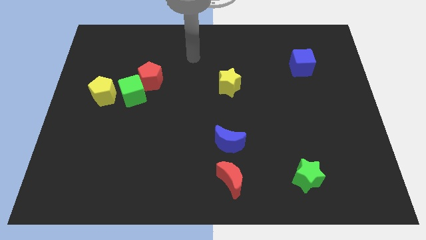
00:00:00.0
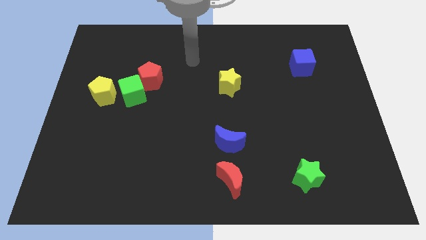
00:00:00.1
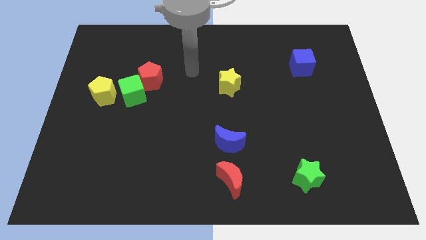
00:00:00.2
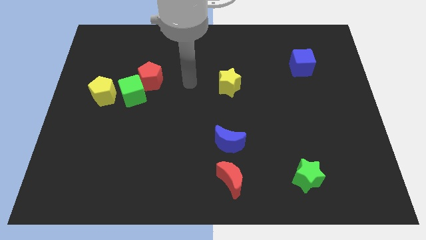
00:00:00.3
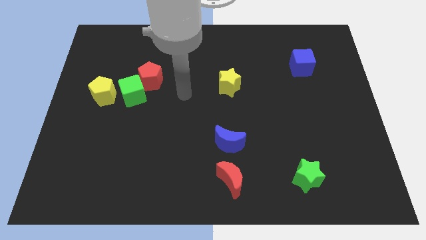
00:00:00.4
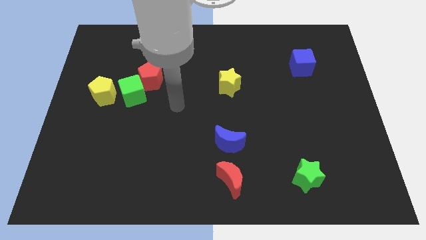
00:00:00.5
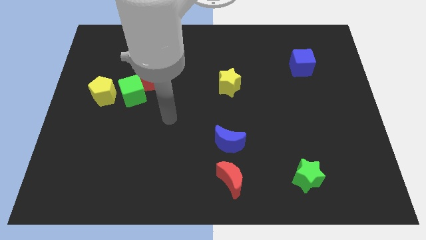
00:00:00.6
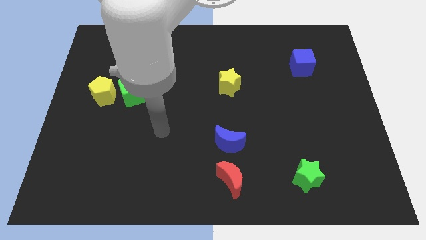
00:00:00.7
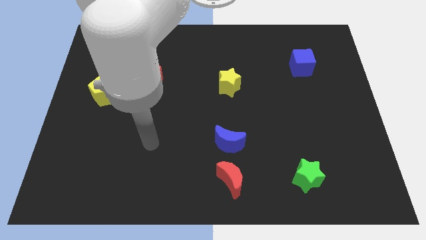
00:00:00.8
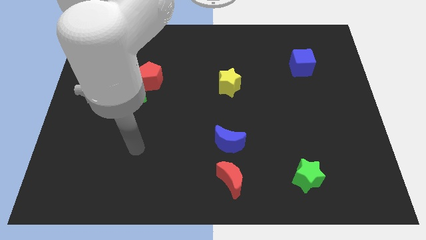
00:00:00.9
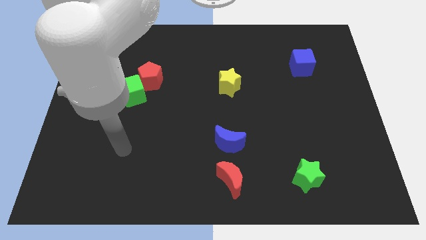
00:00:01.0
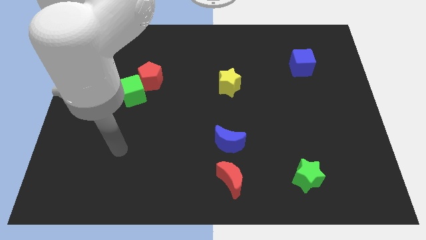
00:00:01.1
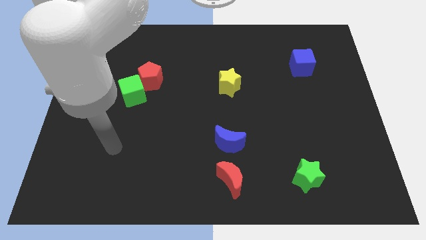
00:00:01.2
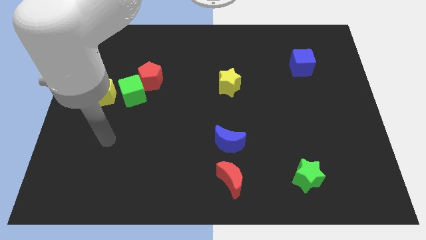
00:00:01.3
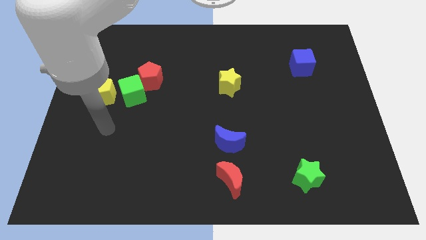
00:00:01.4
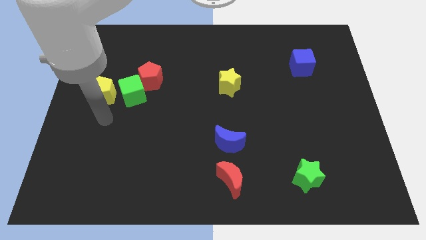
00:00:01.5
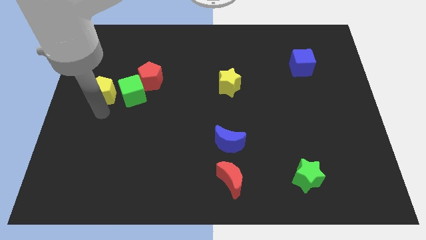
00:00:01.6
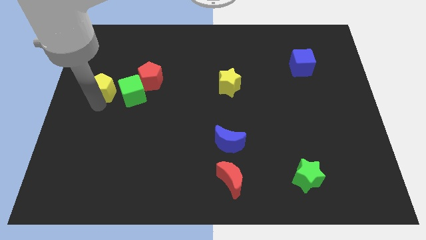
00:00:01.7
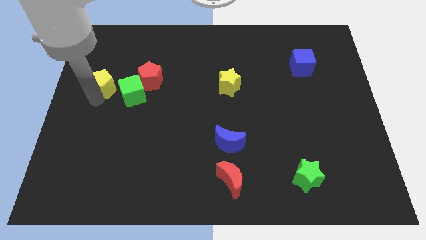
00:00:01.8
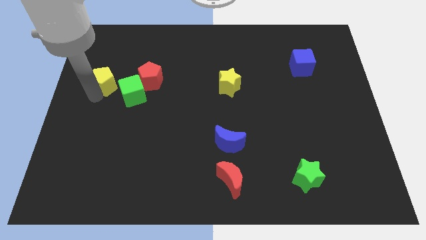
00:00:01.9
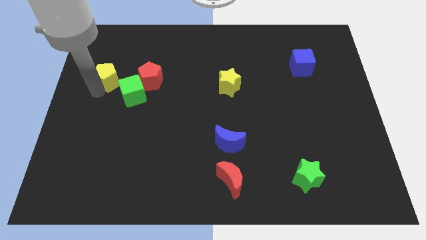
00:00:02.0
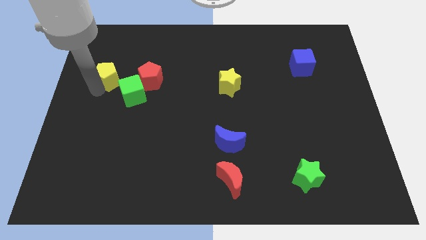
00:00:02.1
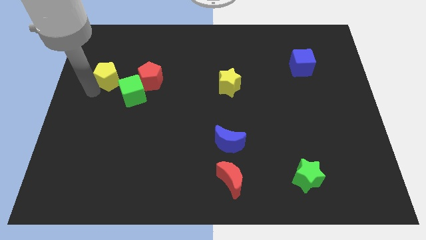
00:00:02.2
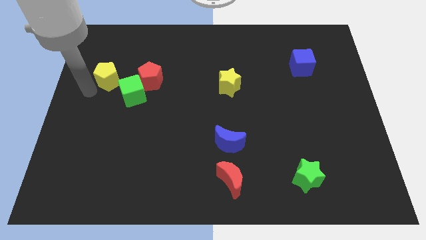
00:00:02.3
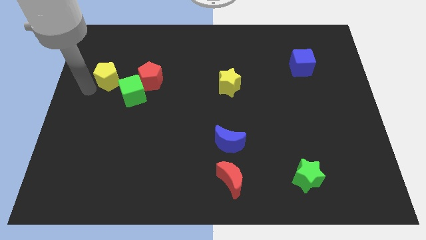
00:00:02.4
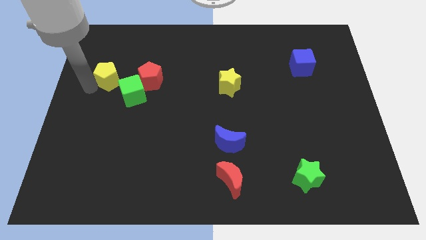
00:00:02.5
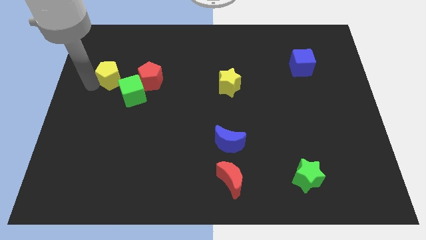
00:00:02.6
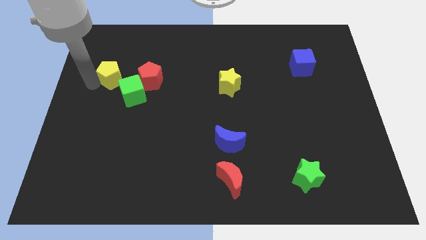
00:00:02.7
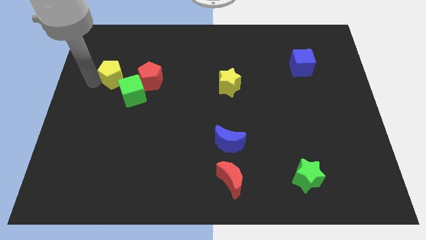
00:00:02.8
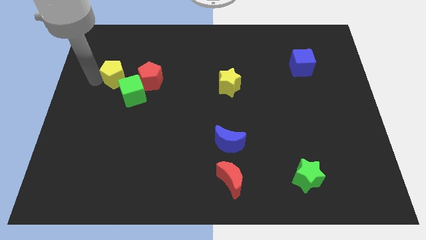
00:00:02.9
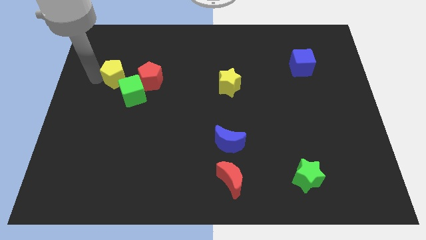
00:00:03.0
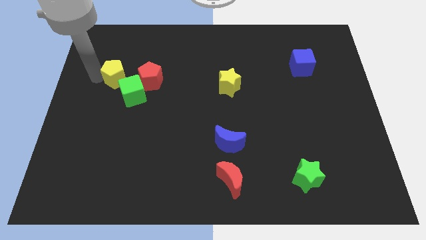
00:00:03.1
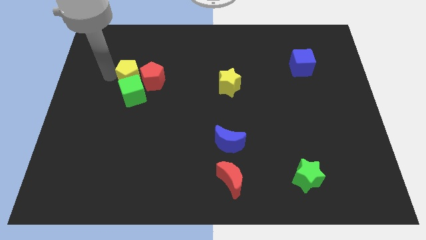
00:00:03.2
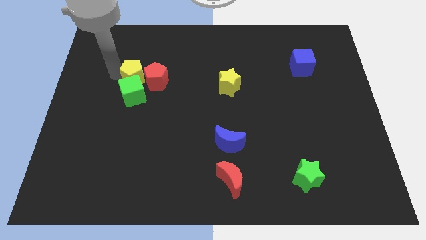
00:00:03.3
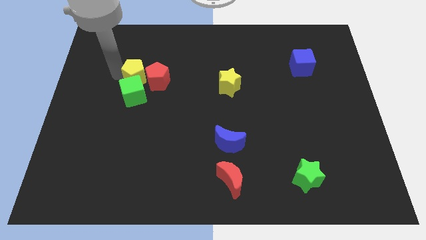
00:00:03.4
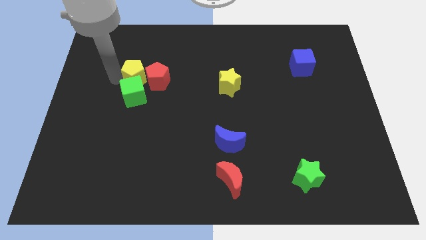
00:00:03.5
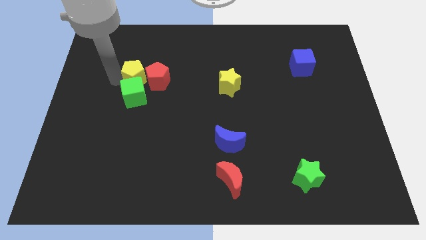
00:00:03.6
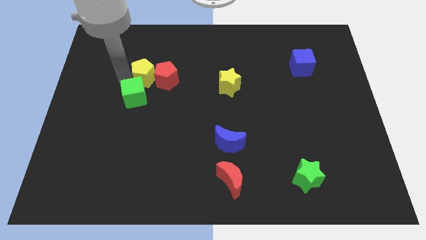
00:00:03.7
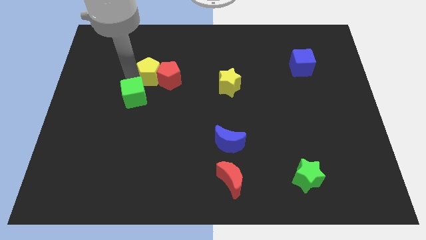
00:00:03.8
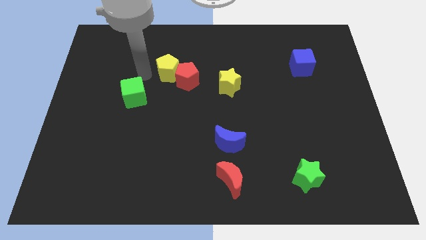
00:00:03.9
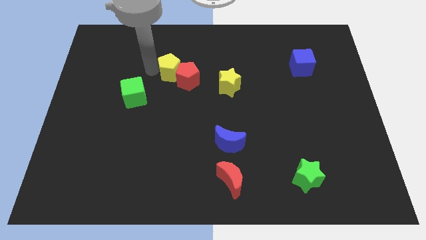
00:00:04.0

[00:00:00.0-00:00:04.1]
separate the pentagons from the green cube

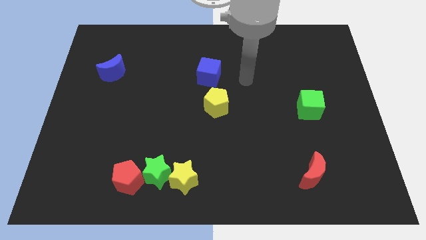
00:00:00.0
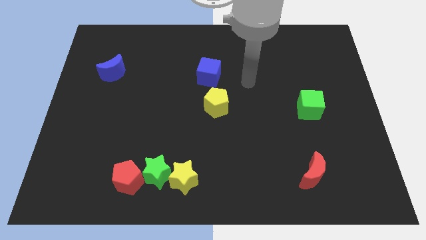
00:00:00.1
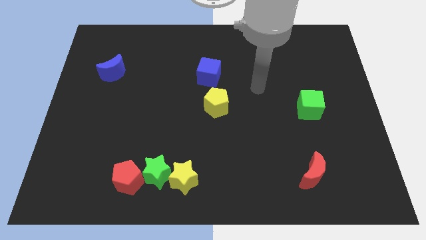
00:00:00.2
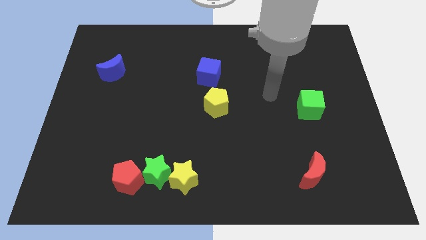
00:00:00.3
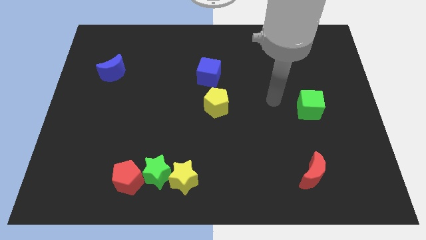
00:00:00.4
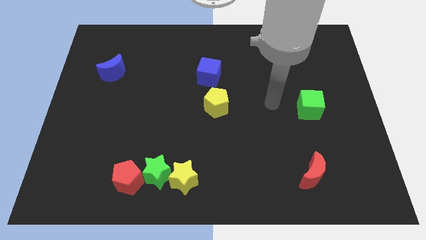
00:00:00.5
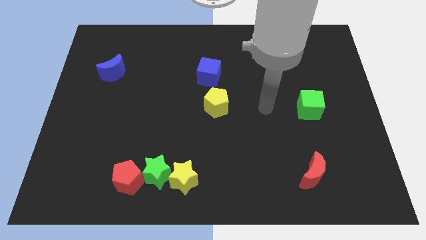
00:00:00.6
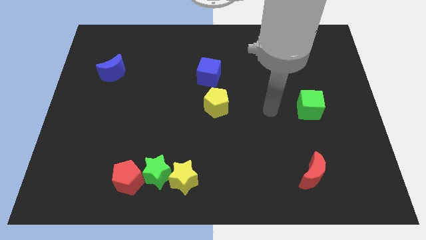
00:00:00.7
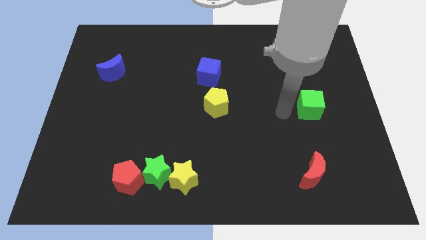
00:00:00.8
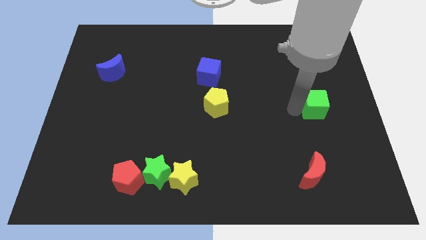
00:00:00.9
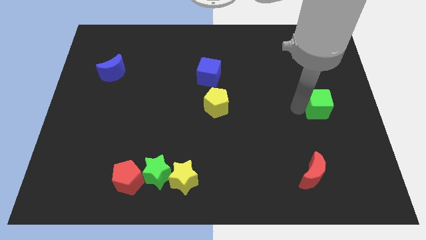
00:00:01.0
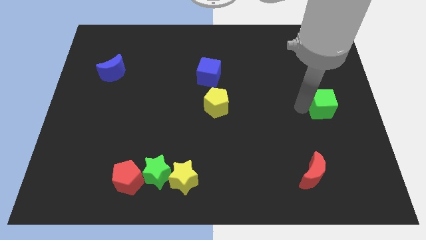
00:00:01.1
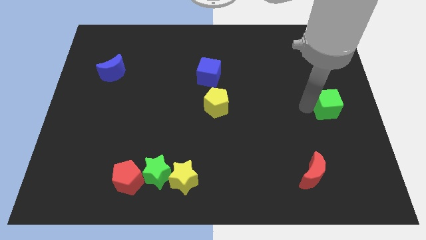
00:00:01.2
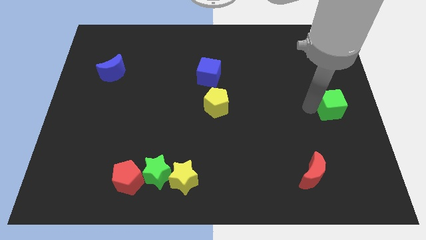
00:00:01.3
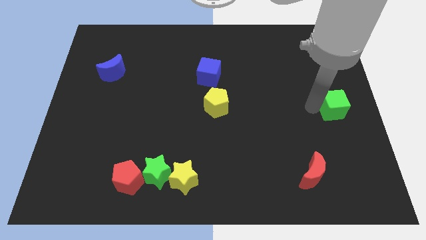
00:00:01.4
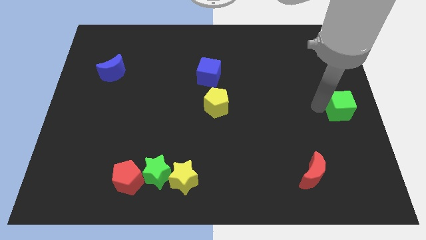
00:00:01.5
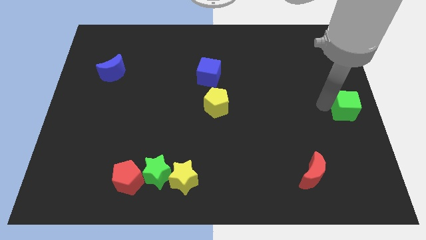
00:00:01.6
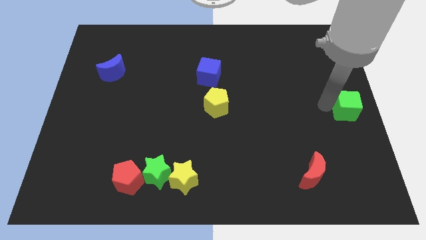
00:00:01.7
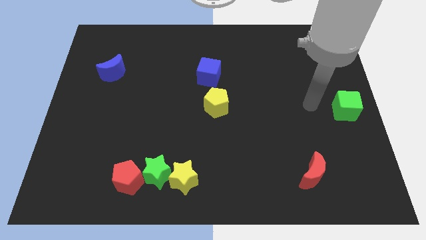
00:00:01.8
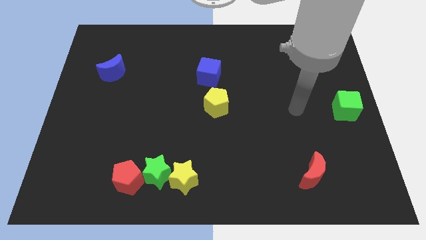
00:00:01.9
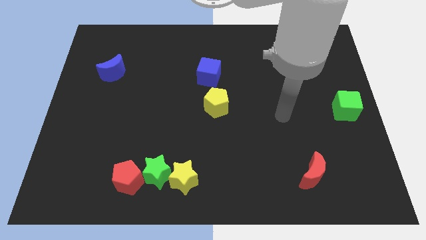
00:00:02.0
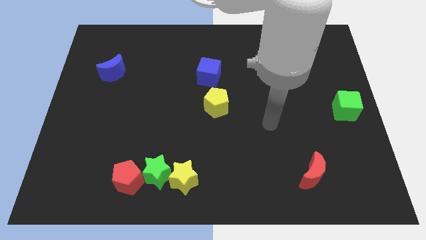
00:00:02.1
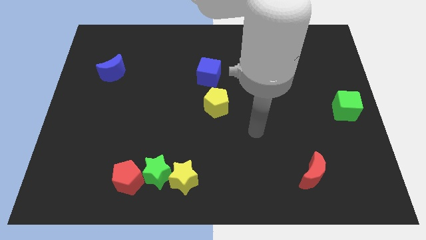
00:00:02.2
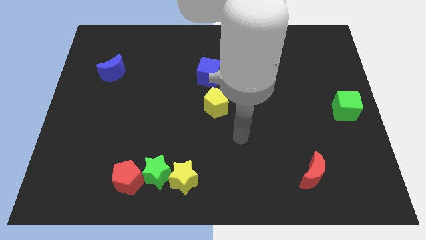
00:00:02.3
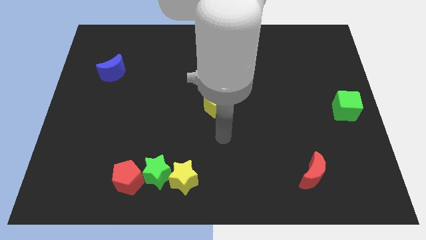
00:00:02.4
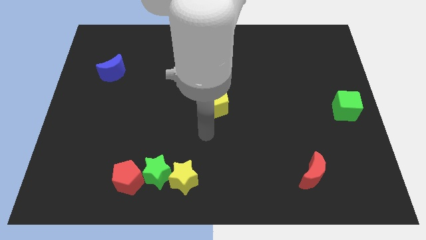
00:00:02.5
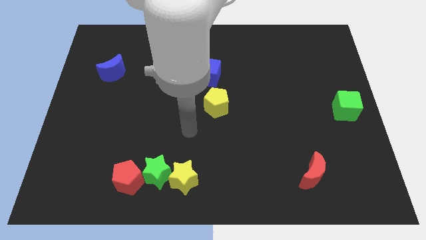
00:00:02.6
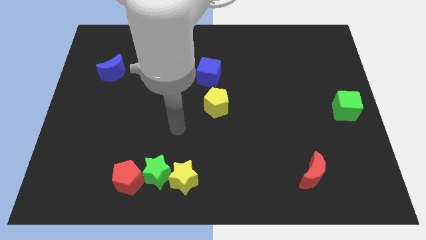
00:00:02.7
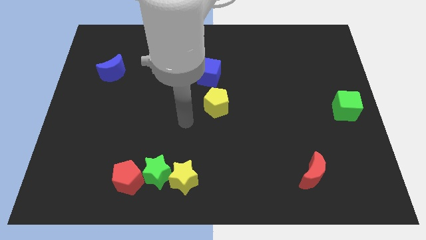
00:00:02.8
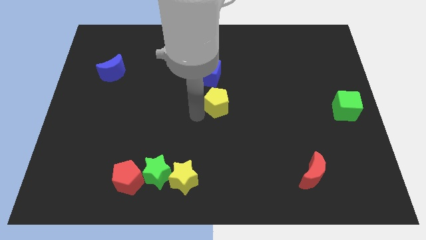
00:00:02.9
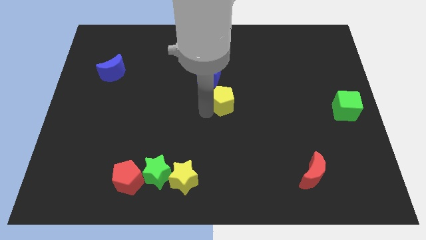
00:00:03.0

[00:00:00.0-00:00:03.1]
place the green cube right middle of the board

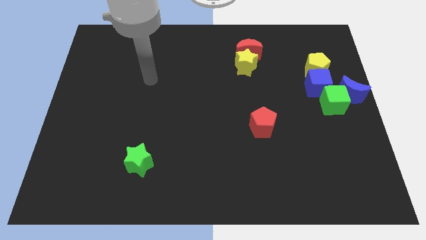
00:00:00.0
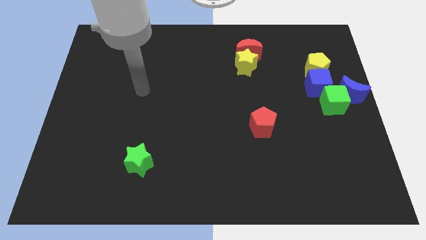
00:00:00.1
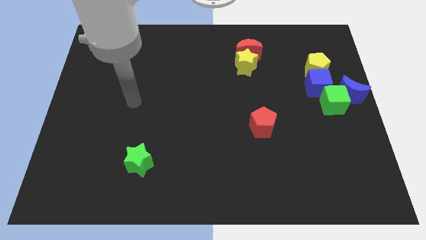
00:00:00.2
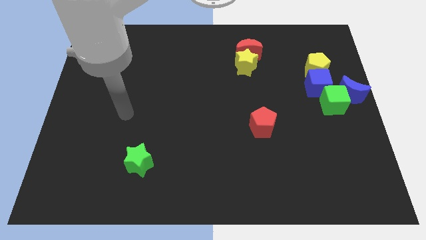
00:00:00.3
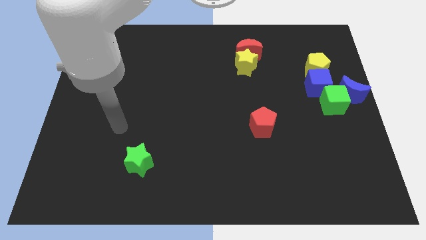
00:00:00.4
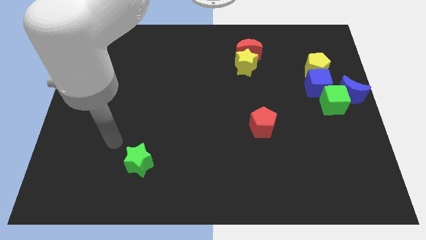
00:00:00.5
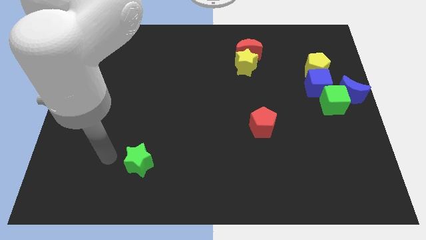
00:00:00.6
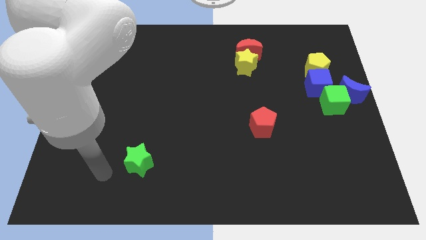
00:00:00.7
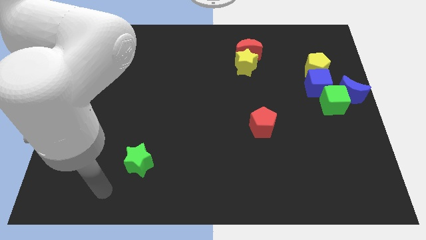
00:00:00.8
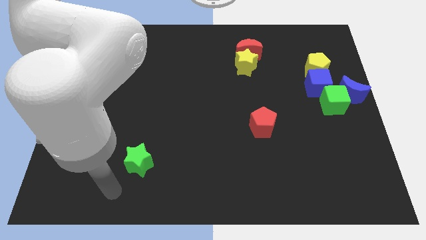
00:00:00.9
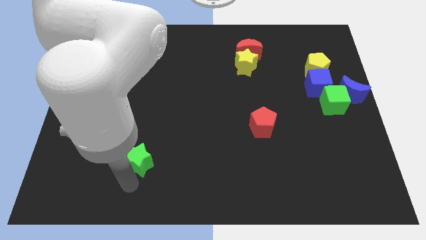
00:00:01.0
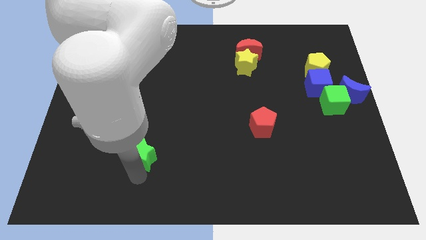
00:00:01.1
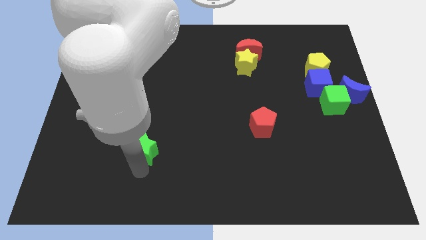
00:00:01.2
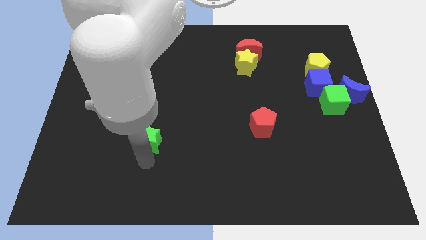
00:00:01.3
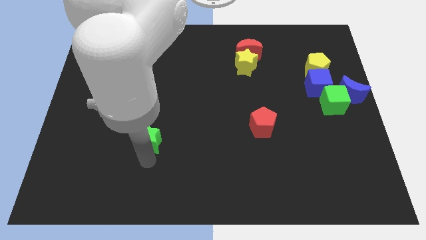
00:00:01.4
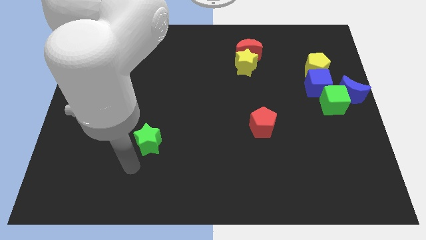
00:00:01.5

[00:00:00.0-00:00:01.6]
slightly push the green star up

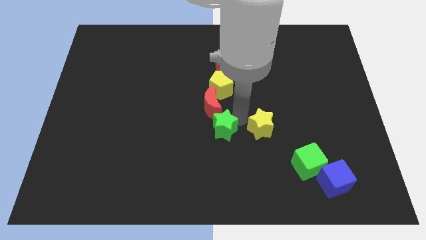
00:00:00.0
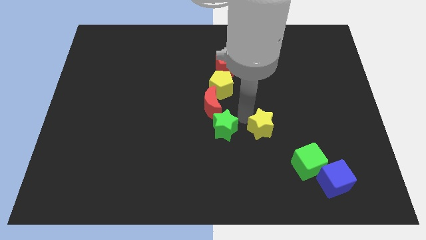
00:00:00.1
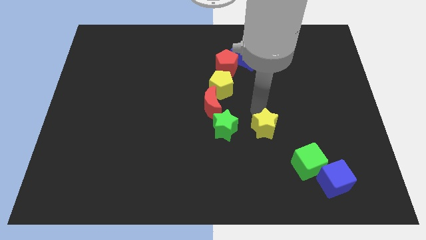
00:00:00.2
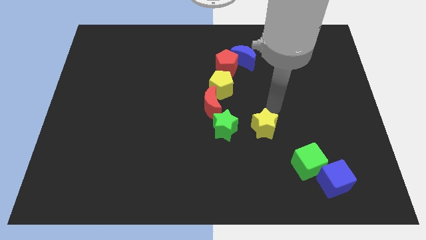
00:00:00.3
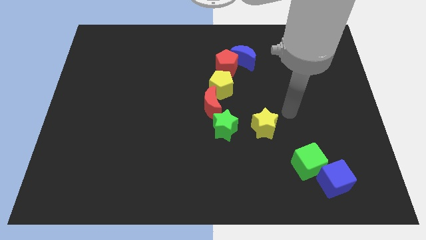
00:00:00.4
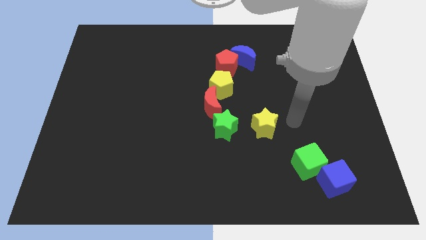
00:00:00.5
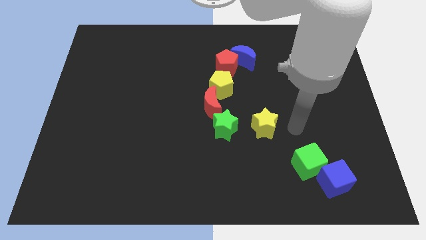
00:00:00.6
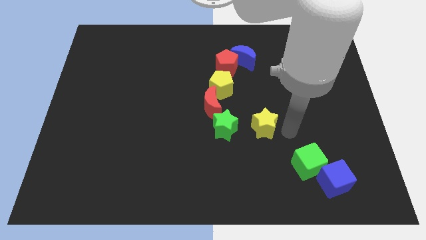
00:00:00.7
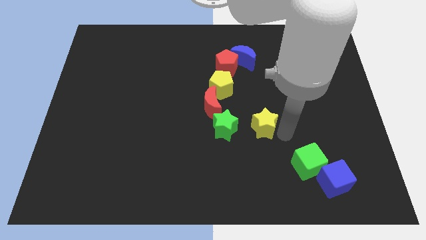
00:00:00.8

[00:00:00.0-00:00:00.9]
move your arm away from green star
